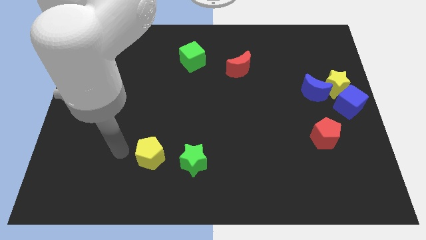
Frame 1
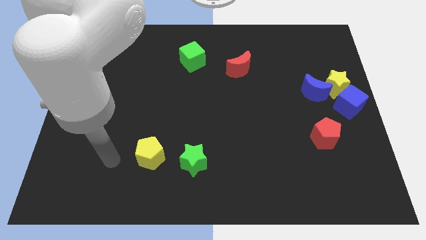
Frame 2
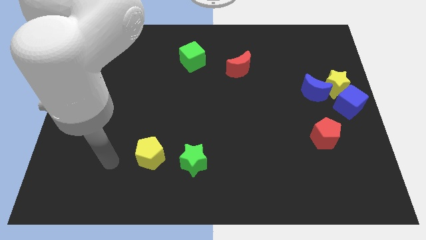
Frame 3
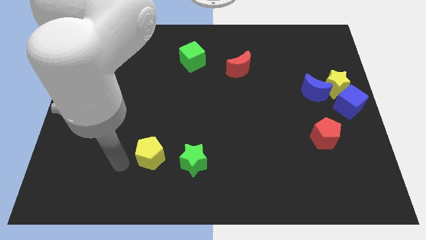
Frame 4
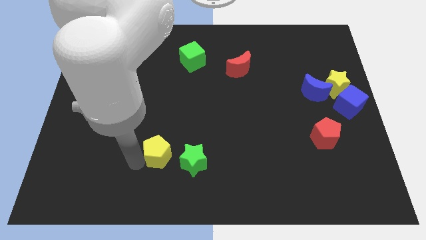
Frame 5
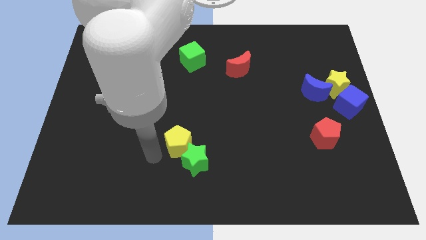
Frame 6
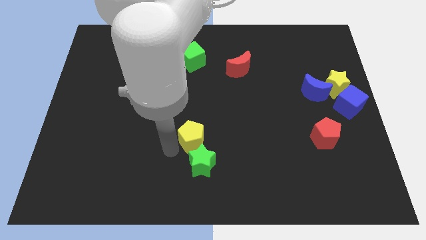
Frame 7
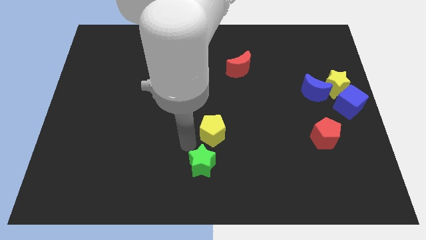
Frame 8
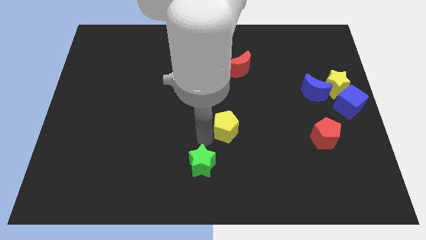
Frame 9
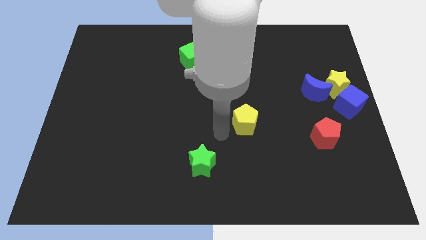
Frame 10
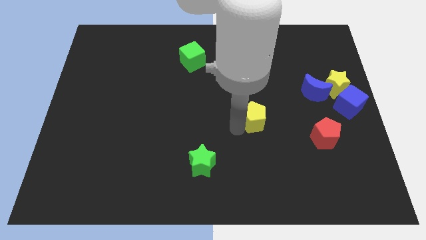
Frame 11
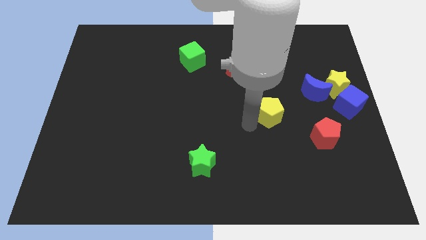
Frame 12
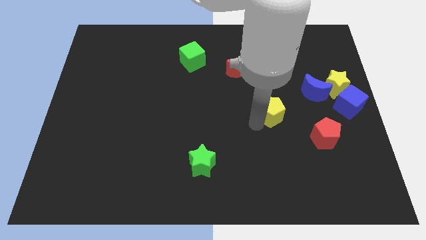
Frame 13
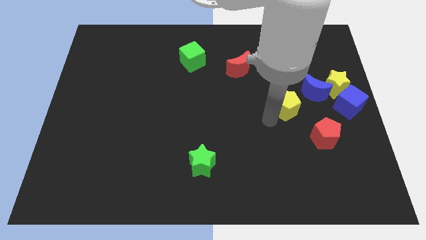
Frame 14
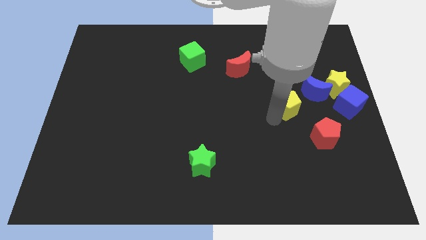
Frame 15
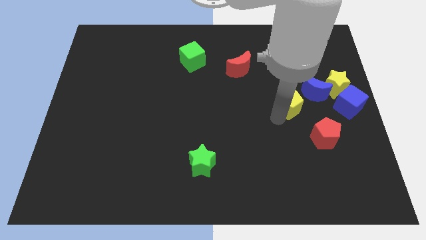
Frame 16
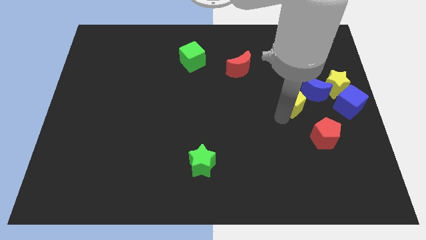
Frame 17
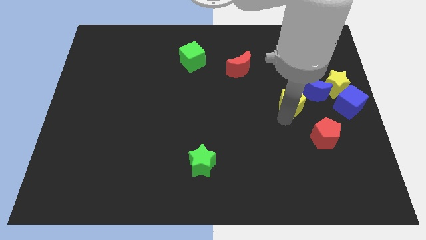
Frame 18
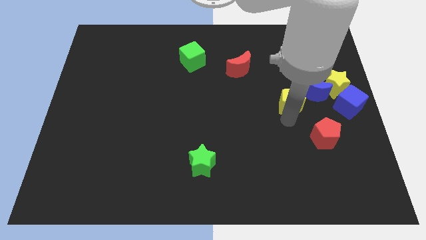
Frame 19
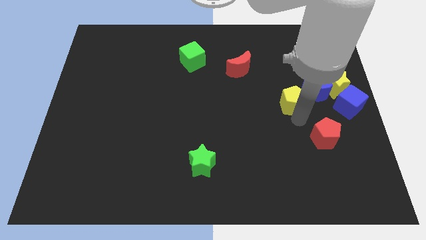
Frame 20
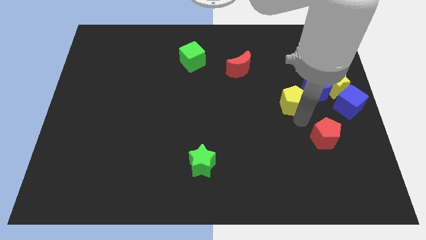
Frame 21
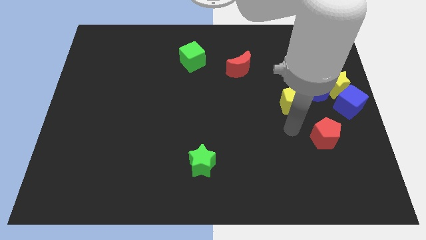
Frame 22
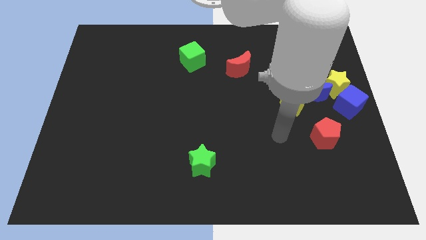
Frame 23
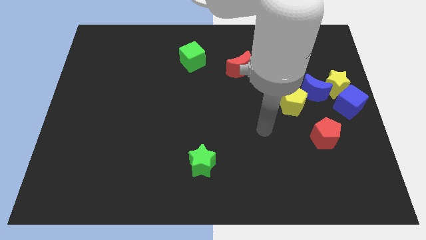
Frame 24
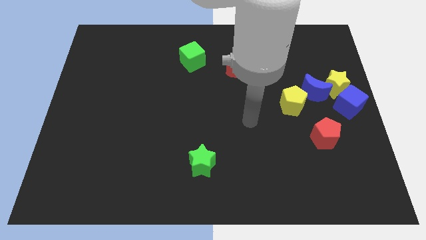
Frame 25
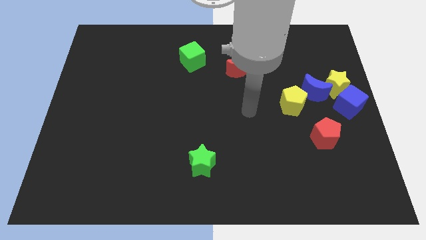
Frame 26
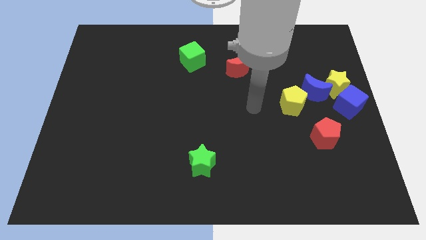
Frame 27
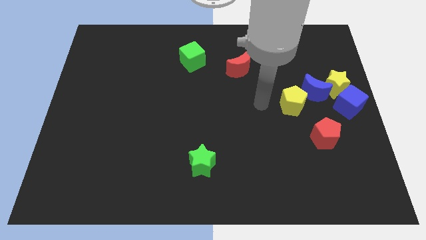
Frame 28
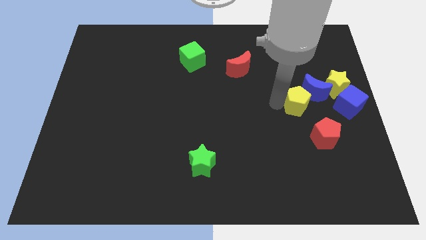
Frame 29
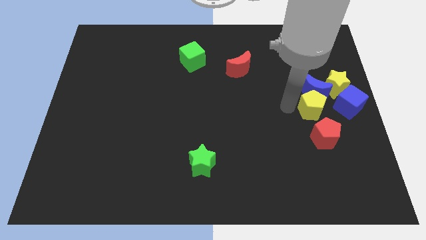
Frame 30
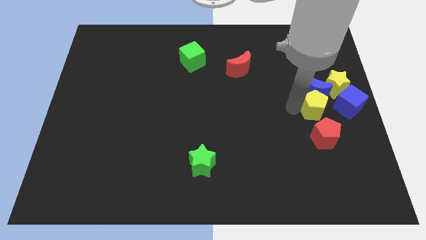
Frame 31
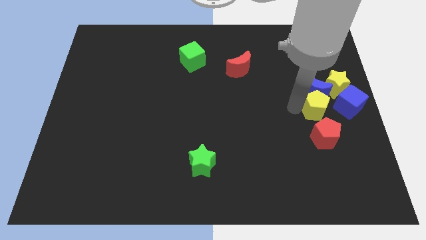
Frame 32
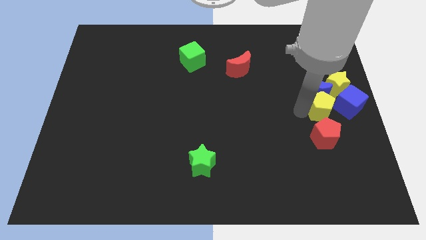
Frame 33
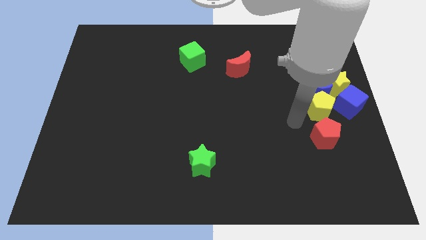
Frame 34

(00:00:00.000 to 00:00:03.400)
push the yellow pentagon to the bottom of the blue crescent

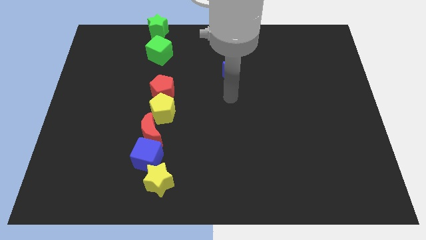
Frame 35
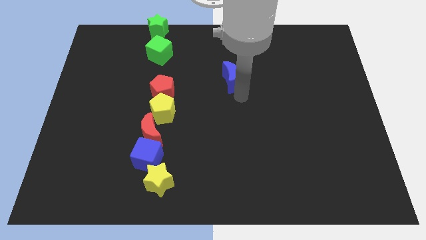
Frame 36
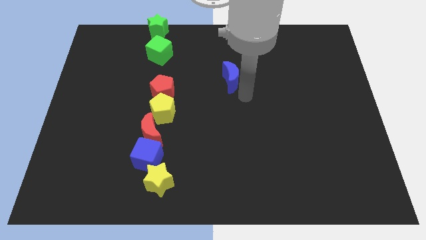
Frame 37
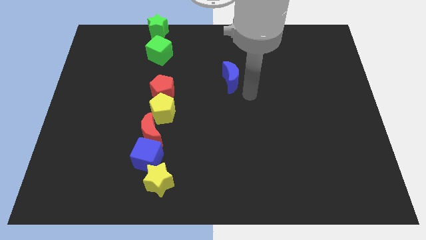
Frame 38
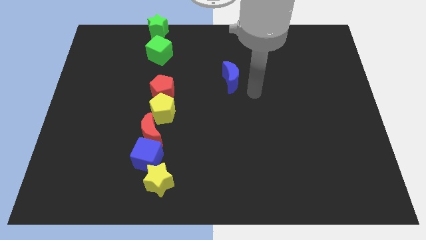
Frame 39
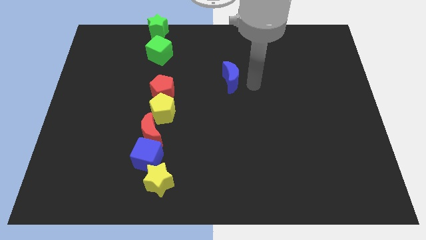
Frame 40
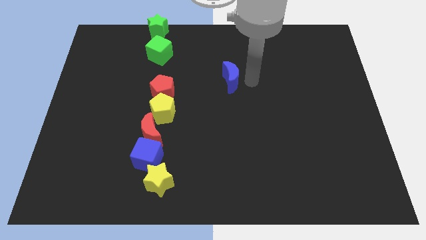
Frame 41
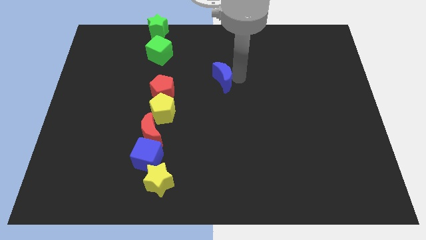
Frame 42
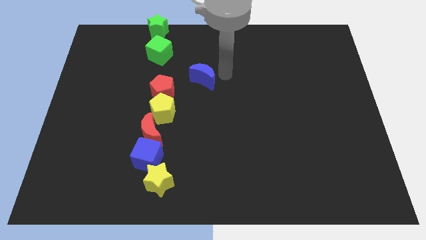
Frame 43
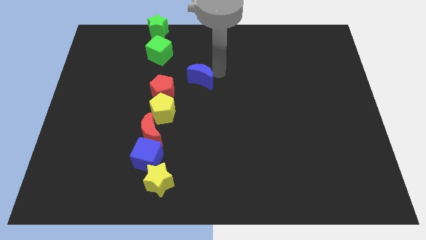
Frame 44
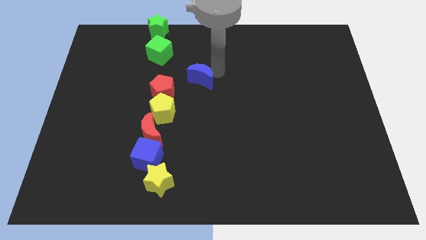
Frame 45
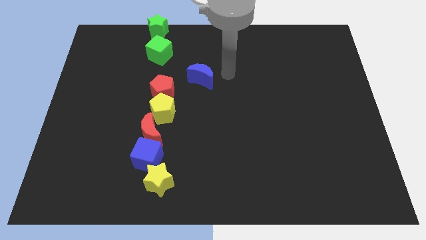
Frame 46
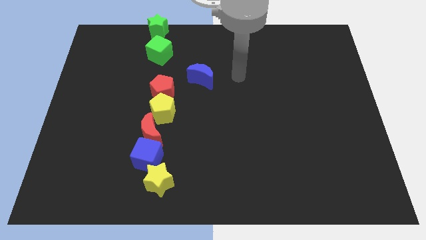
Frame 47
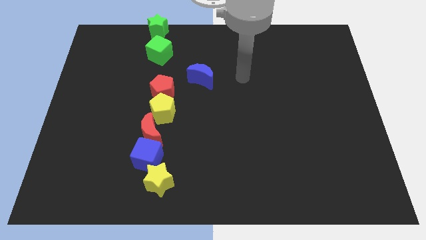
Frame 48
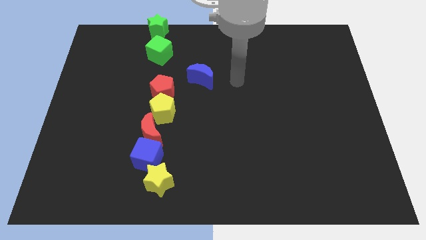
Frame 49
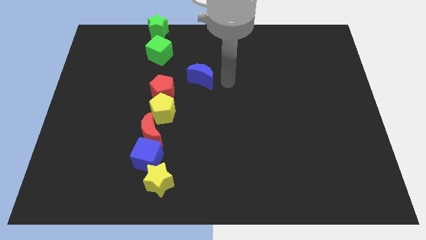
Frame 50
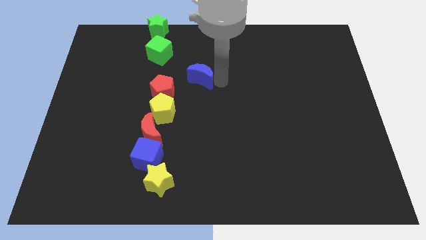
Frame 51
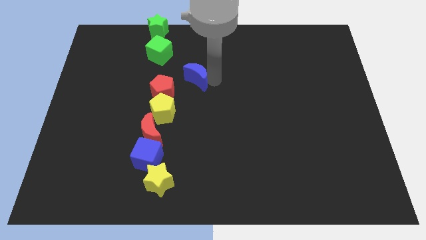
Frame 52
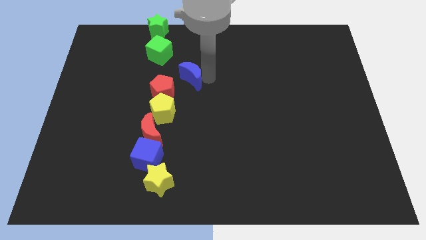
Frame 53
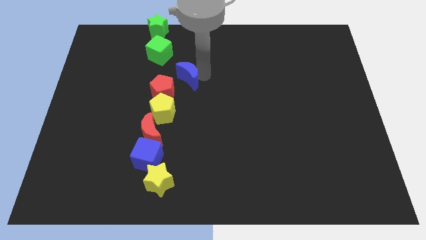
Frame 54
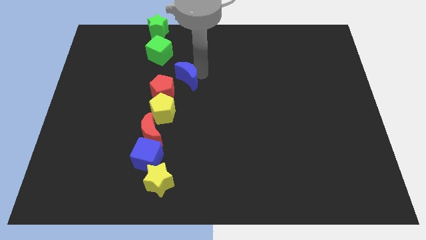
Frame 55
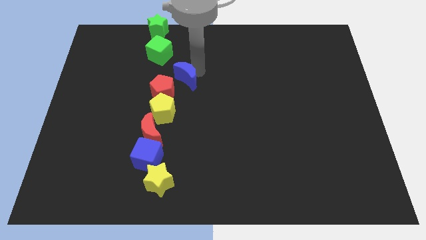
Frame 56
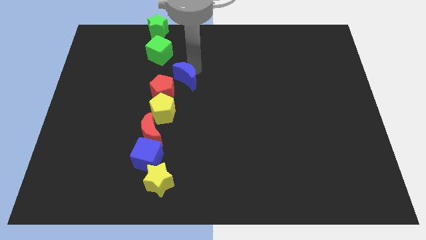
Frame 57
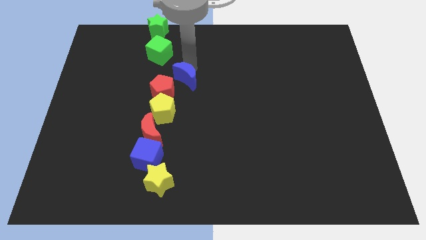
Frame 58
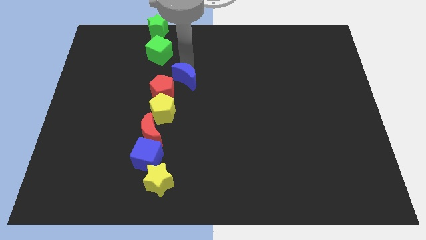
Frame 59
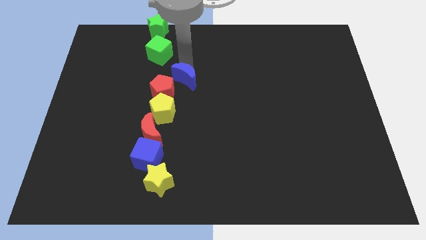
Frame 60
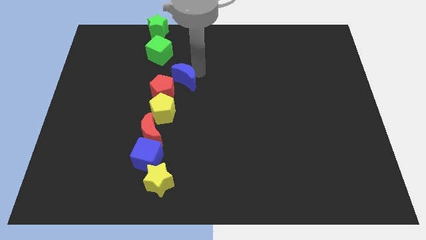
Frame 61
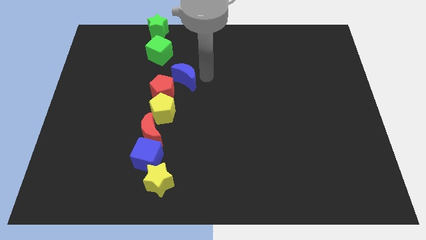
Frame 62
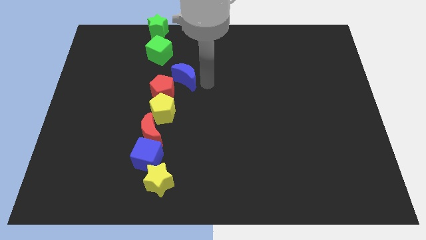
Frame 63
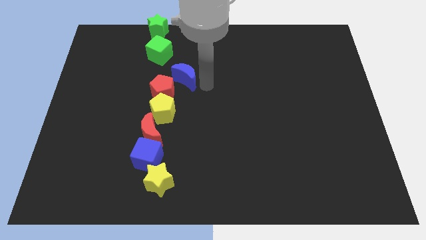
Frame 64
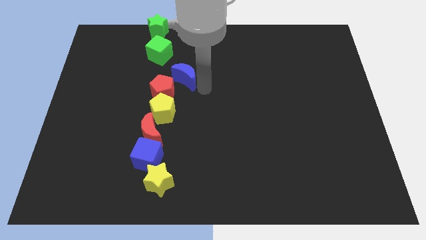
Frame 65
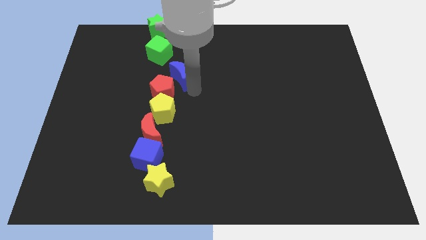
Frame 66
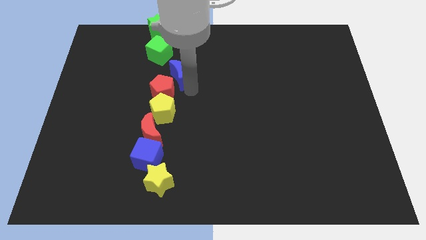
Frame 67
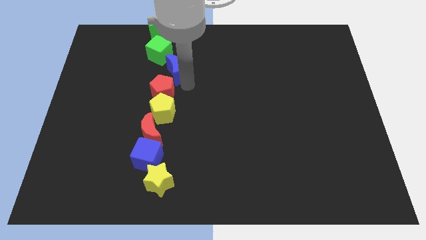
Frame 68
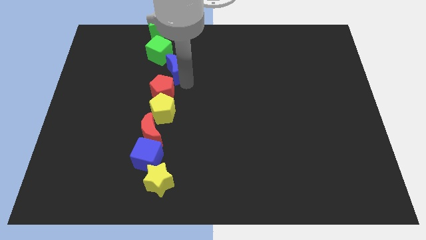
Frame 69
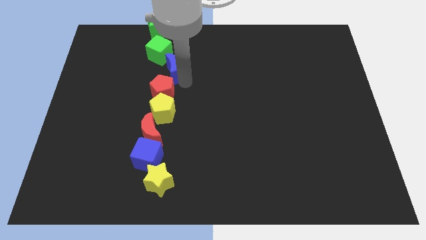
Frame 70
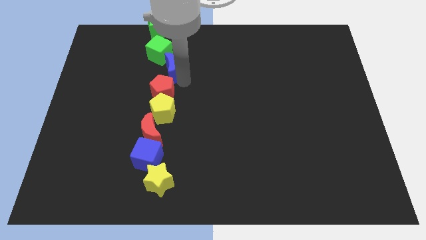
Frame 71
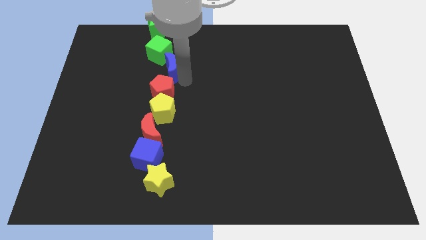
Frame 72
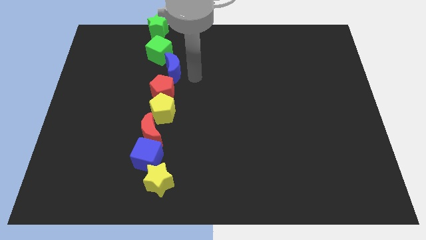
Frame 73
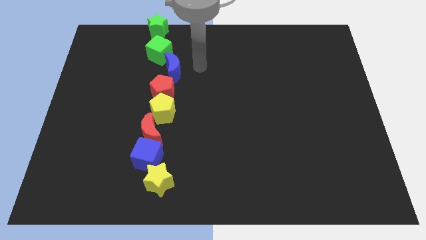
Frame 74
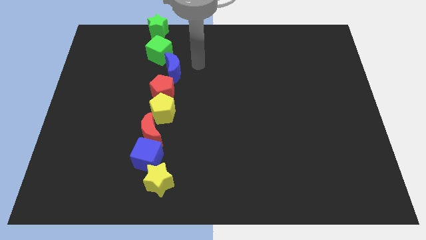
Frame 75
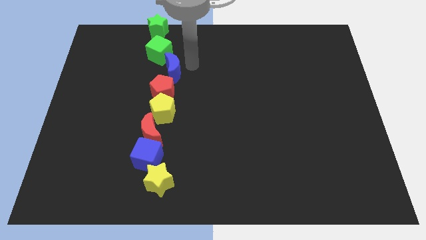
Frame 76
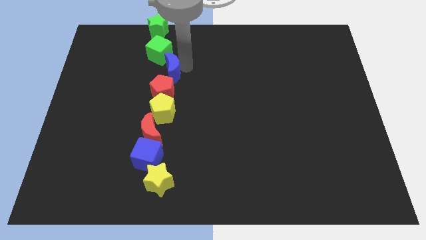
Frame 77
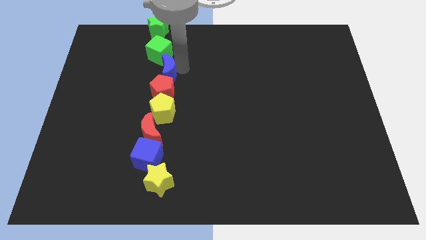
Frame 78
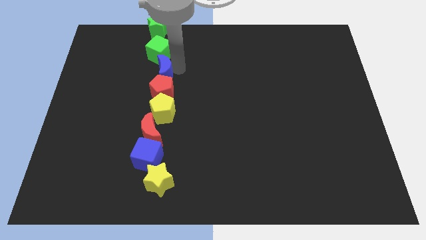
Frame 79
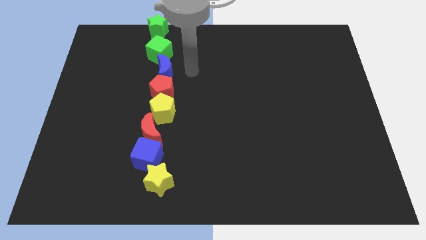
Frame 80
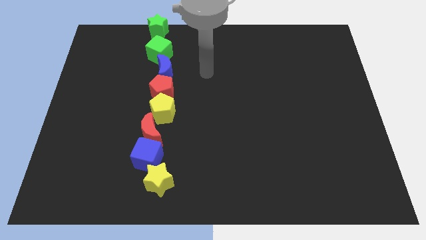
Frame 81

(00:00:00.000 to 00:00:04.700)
push blue moon in between green cube and red pentagon to form a line

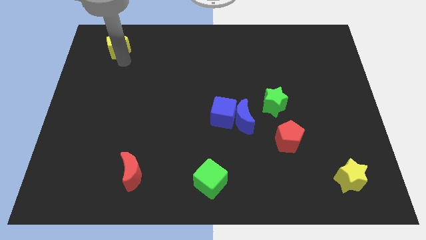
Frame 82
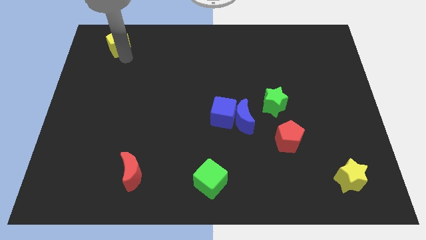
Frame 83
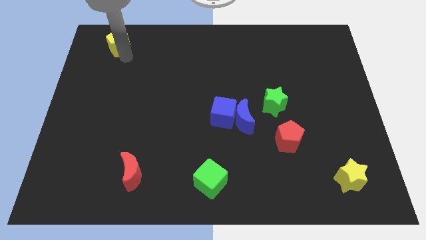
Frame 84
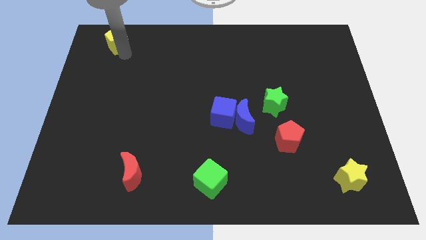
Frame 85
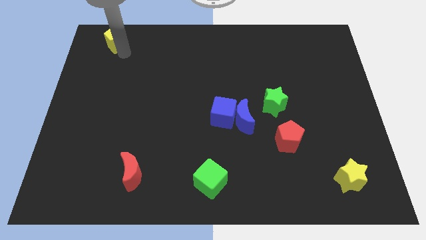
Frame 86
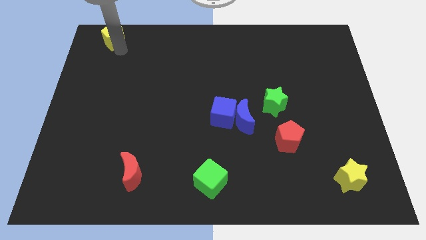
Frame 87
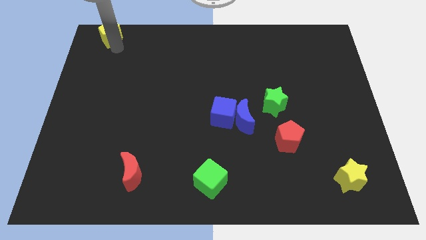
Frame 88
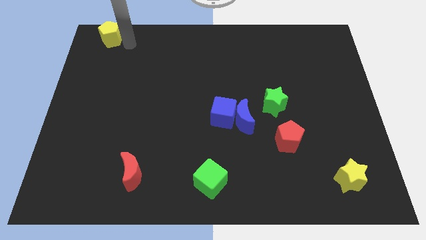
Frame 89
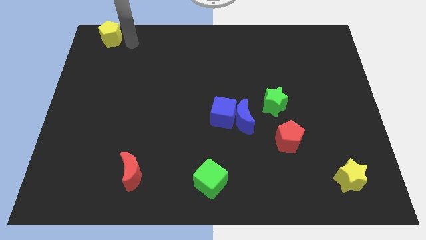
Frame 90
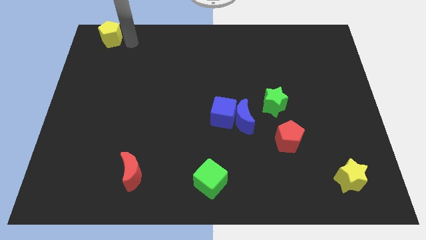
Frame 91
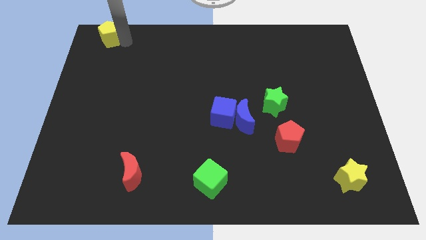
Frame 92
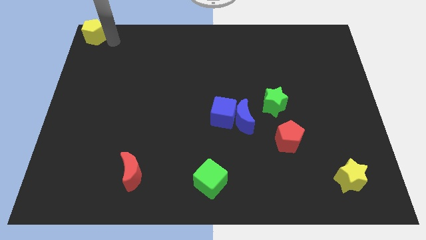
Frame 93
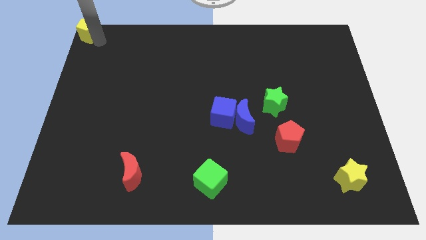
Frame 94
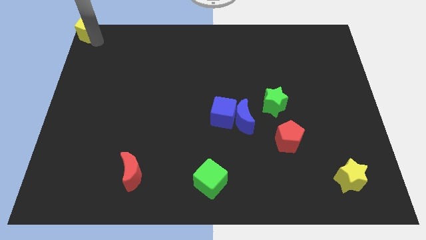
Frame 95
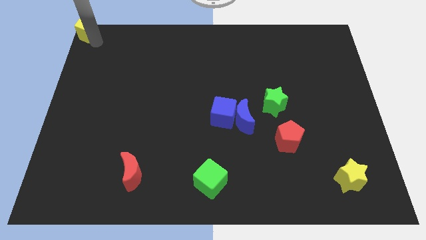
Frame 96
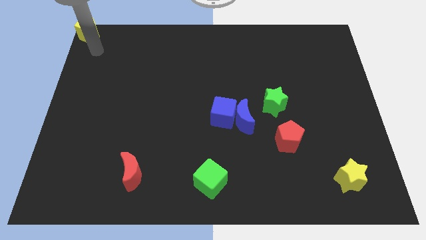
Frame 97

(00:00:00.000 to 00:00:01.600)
put the yellow pentagon vertically above the bottom left corner
